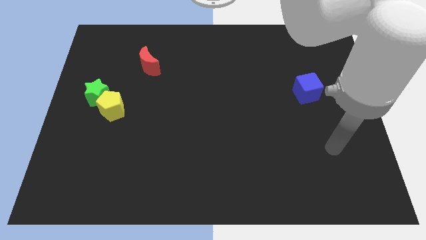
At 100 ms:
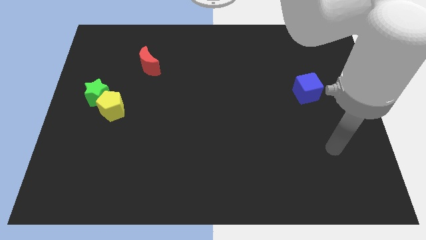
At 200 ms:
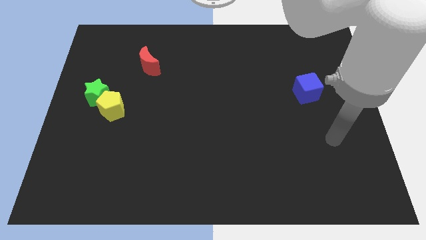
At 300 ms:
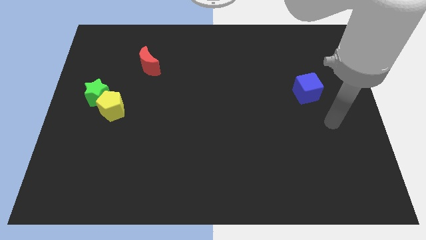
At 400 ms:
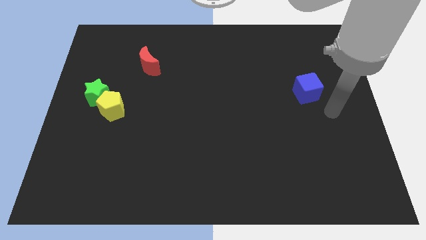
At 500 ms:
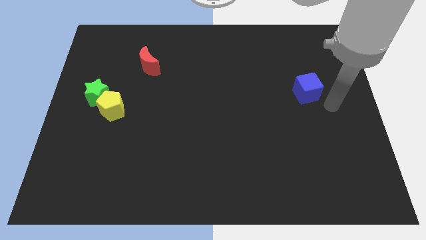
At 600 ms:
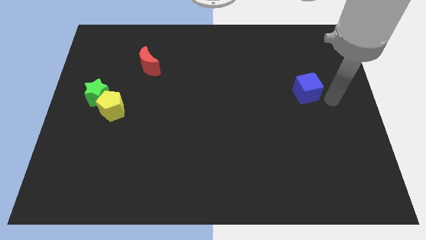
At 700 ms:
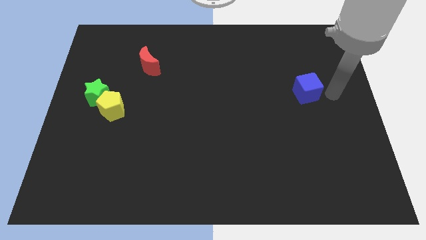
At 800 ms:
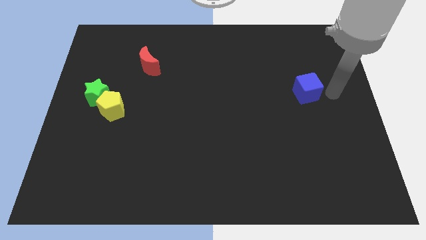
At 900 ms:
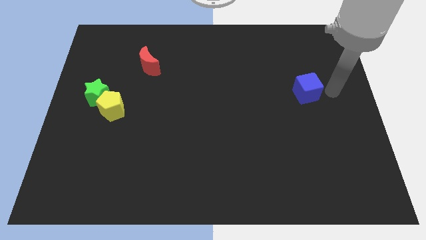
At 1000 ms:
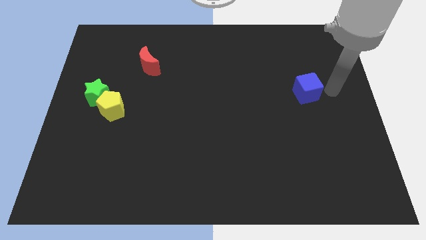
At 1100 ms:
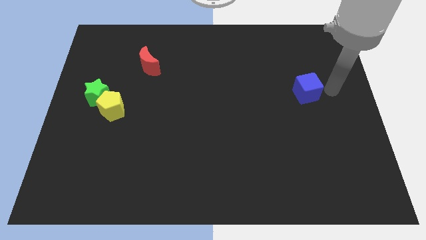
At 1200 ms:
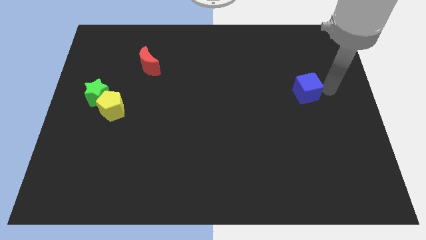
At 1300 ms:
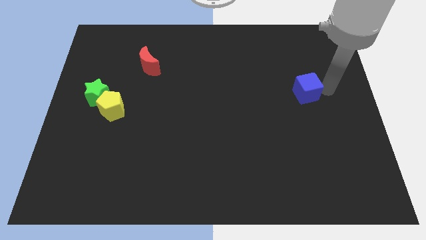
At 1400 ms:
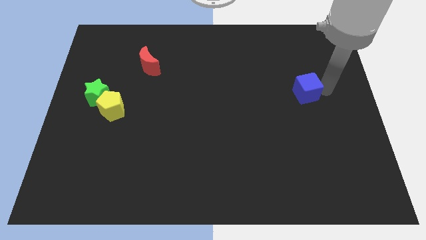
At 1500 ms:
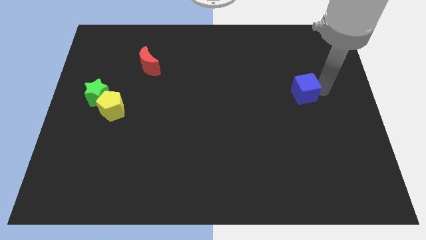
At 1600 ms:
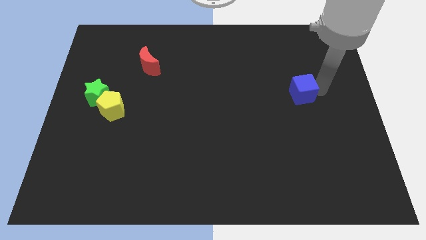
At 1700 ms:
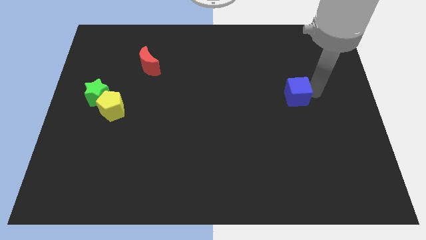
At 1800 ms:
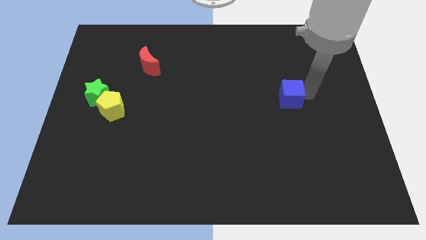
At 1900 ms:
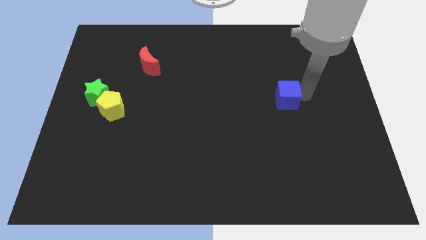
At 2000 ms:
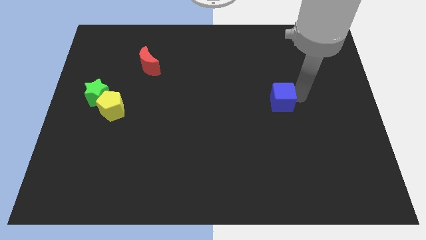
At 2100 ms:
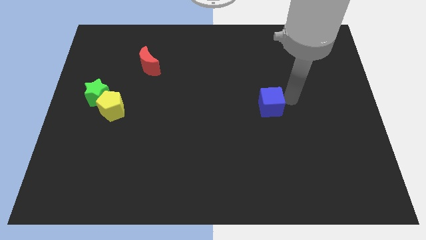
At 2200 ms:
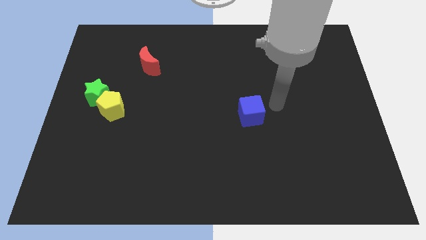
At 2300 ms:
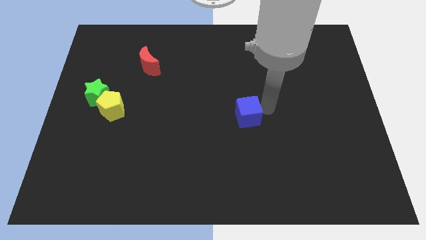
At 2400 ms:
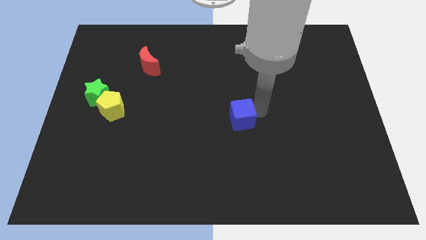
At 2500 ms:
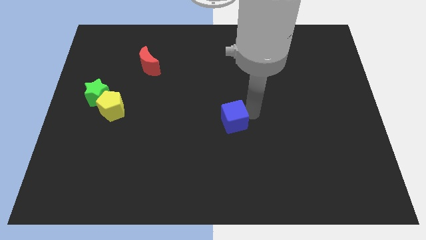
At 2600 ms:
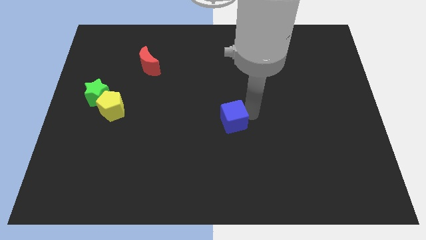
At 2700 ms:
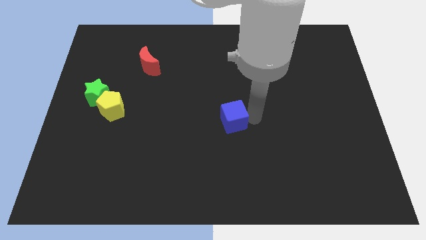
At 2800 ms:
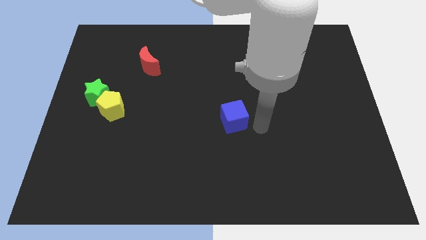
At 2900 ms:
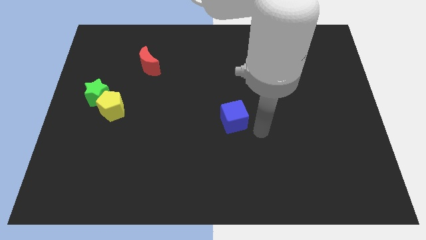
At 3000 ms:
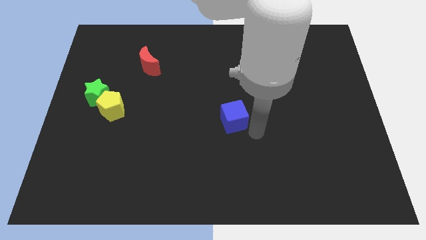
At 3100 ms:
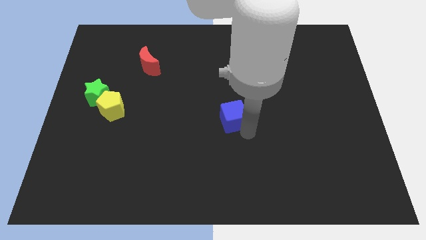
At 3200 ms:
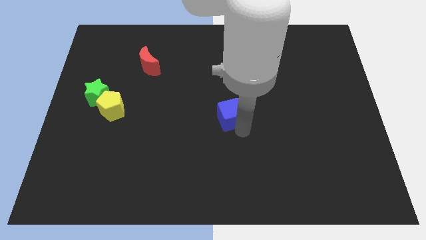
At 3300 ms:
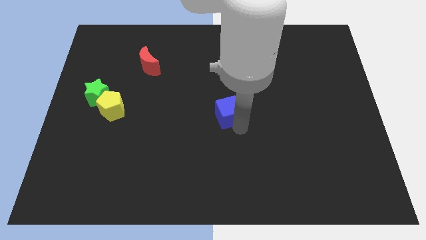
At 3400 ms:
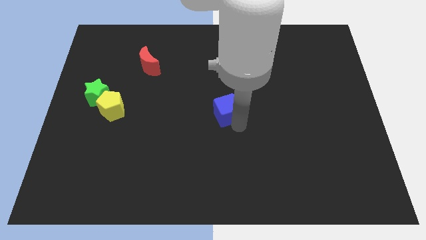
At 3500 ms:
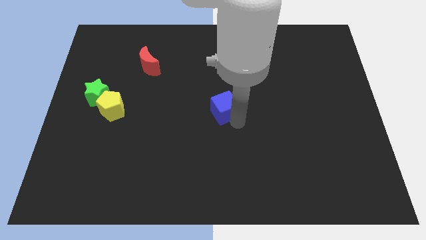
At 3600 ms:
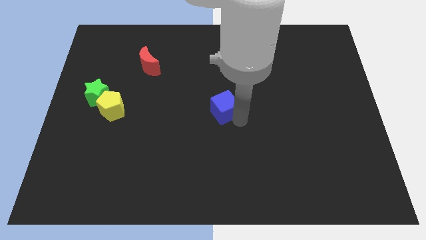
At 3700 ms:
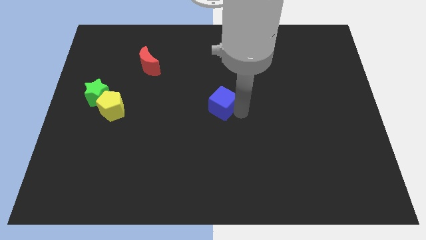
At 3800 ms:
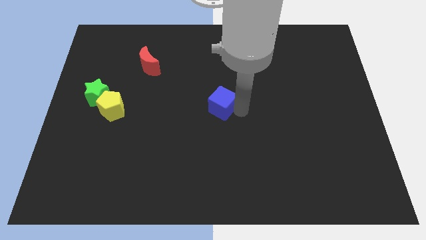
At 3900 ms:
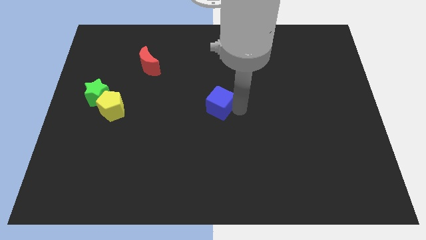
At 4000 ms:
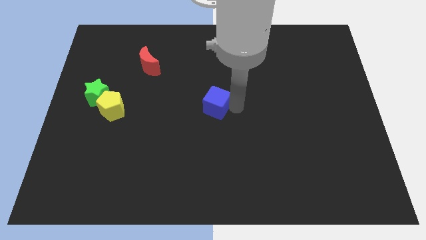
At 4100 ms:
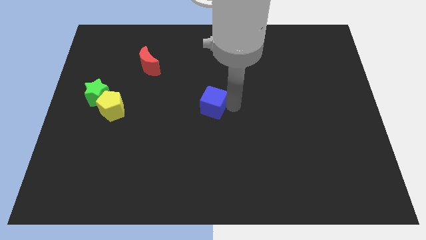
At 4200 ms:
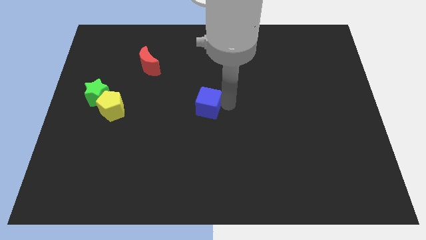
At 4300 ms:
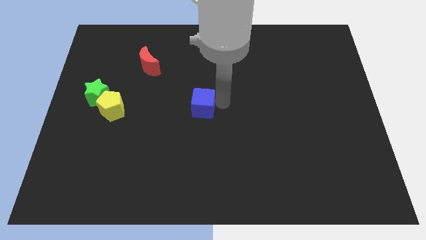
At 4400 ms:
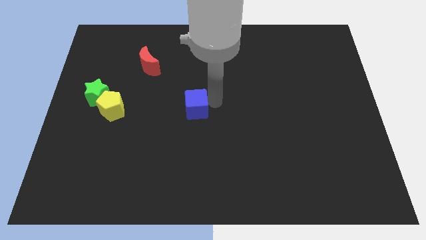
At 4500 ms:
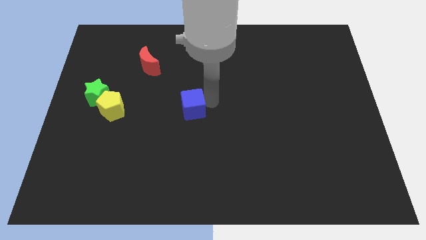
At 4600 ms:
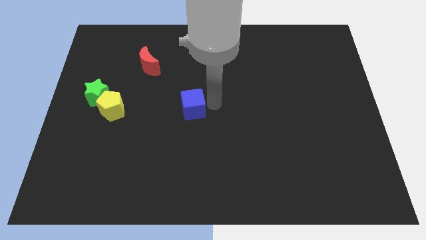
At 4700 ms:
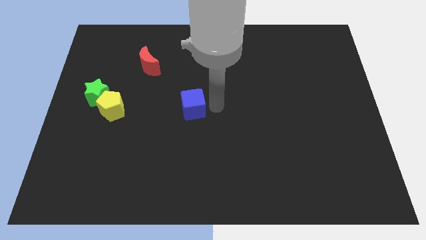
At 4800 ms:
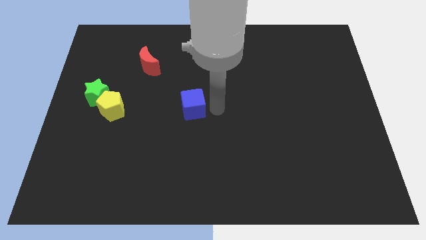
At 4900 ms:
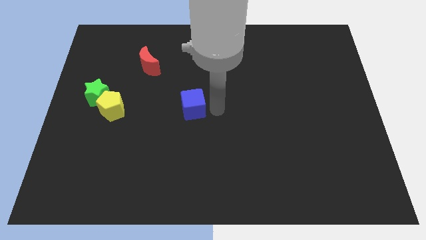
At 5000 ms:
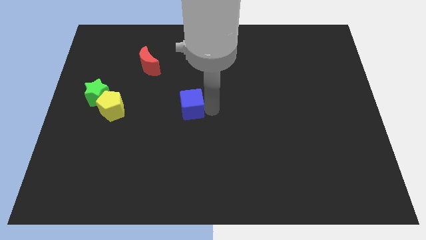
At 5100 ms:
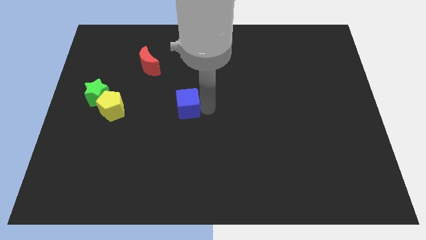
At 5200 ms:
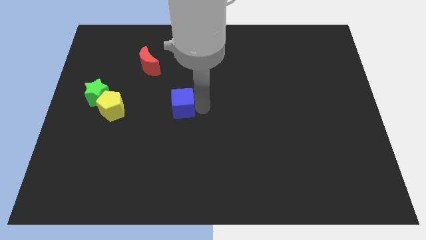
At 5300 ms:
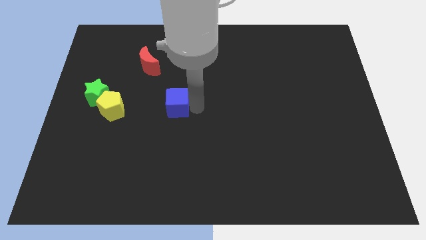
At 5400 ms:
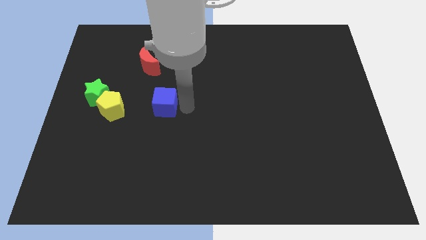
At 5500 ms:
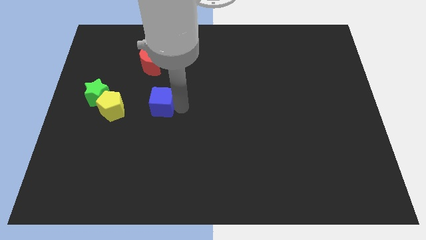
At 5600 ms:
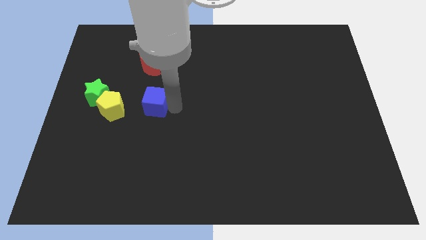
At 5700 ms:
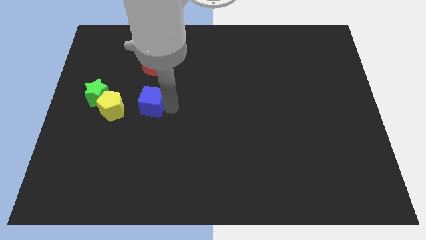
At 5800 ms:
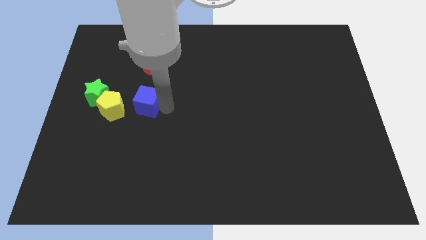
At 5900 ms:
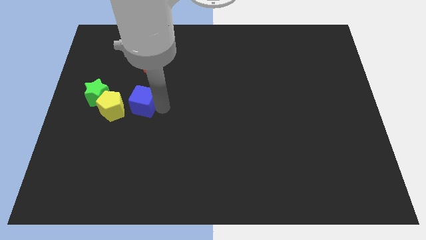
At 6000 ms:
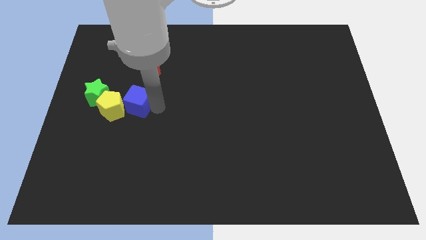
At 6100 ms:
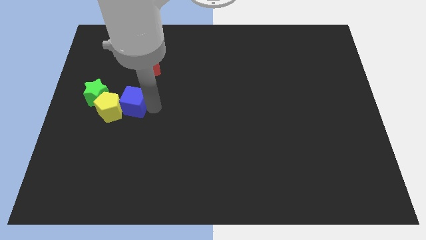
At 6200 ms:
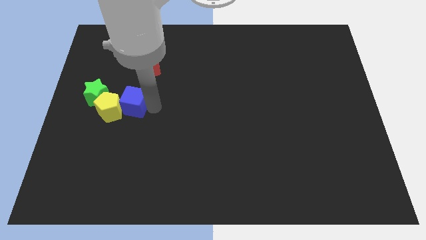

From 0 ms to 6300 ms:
slide the blue cube towards the yellow block

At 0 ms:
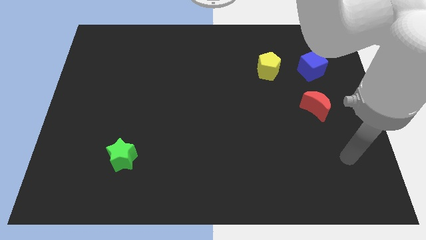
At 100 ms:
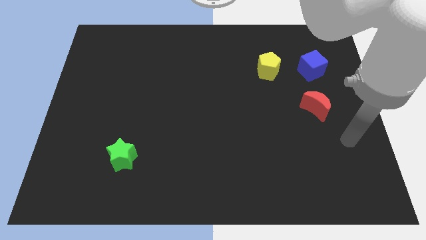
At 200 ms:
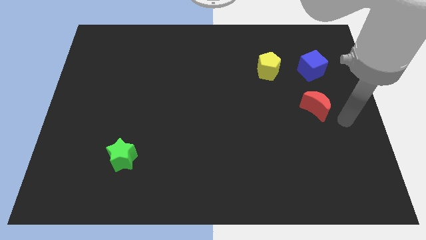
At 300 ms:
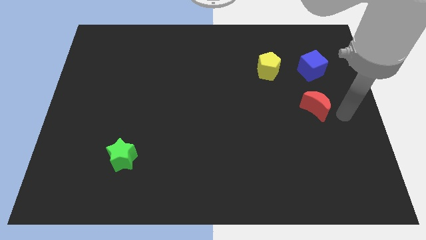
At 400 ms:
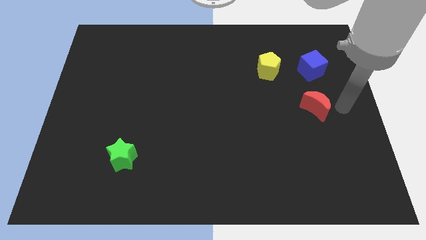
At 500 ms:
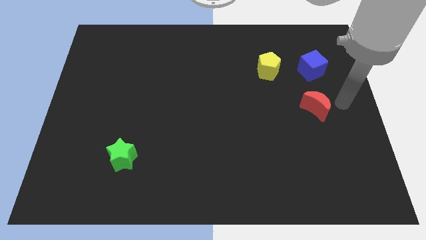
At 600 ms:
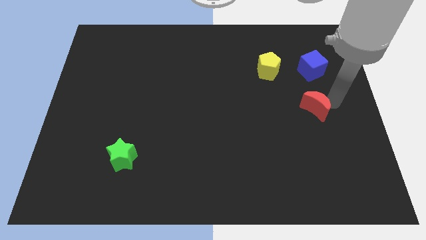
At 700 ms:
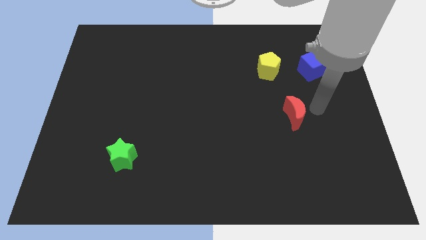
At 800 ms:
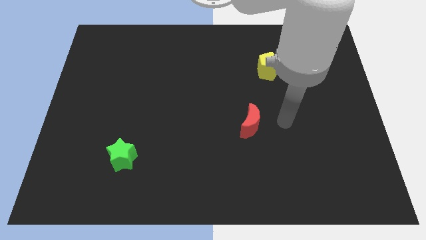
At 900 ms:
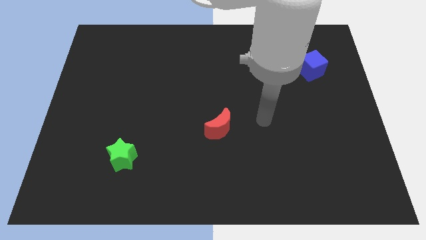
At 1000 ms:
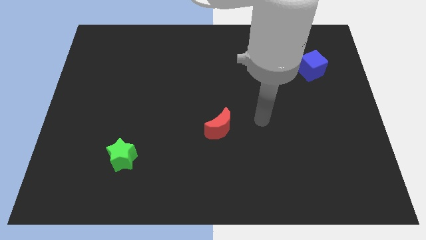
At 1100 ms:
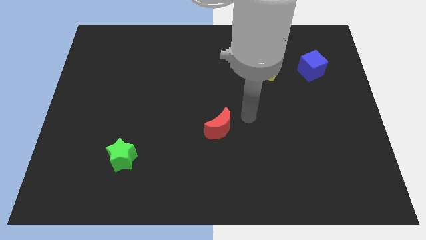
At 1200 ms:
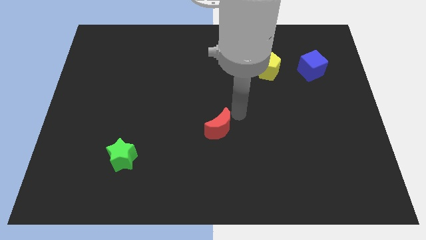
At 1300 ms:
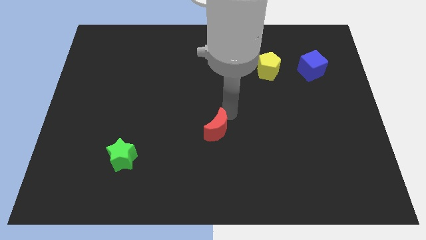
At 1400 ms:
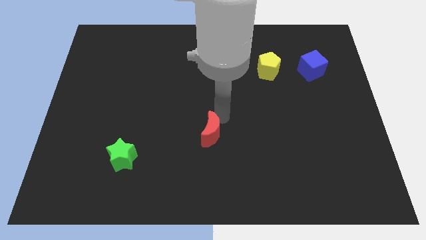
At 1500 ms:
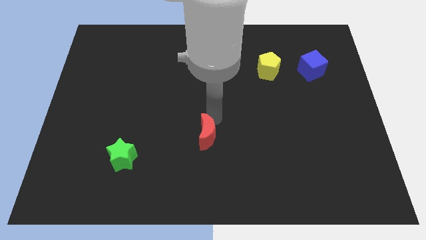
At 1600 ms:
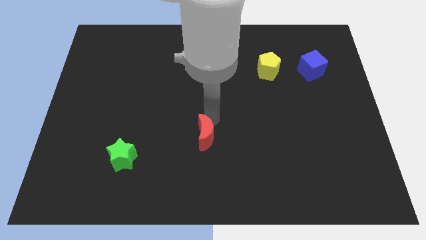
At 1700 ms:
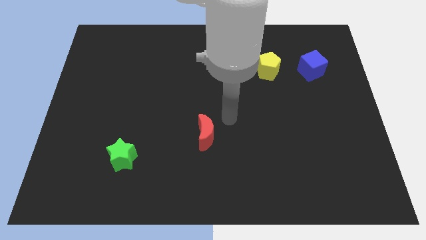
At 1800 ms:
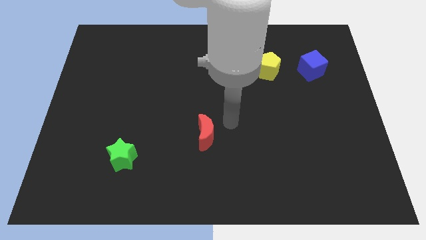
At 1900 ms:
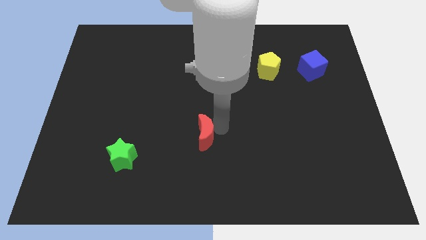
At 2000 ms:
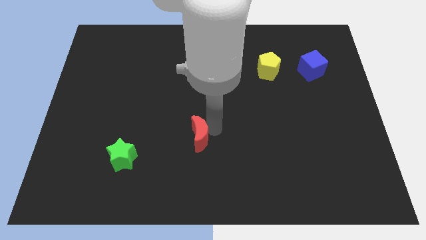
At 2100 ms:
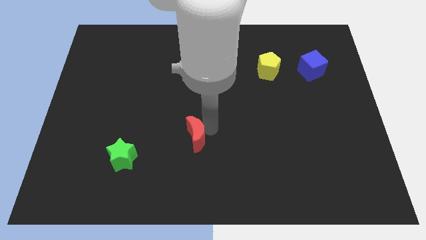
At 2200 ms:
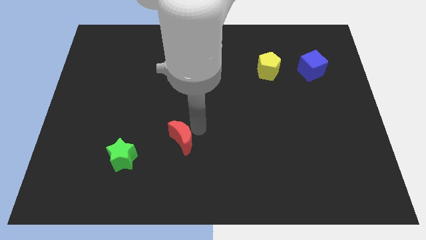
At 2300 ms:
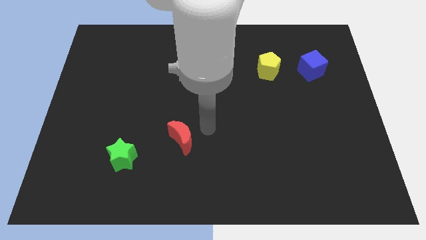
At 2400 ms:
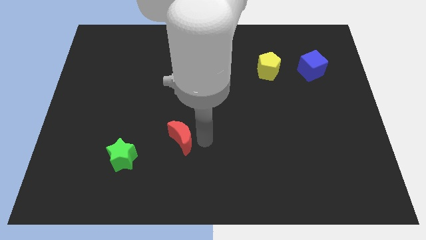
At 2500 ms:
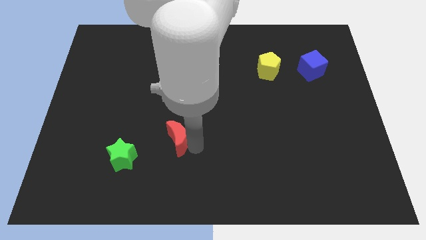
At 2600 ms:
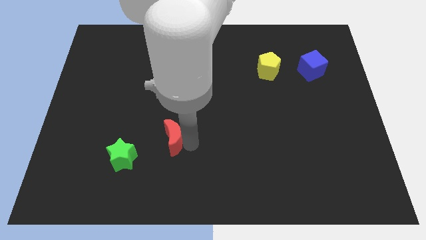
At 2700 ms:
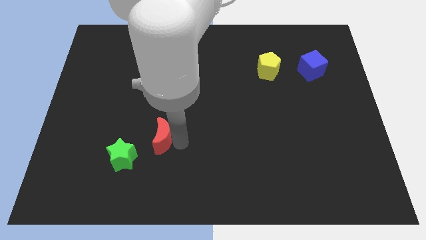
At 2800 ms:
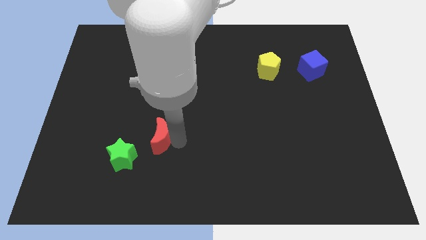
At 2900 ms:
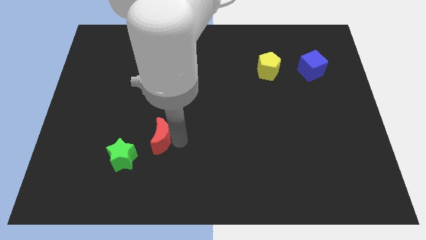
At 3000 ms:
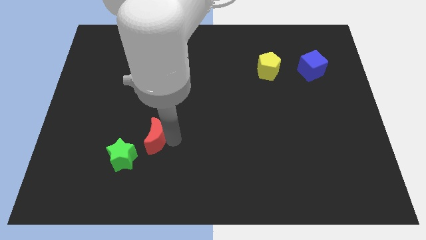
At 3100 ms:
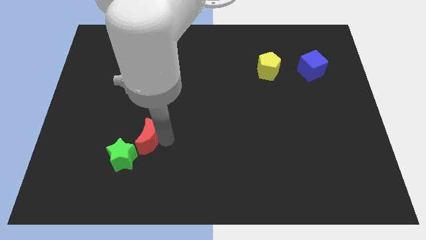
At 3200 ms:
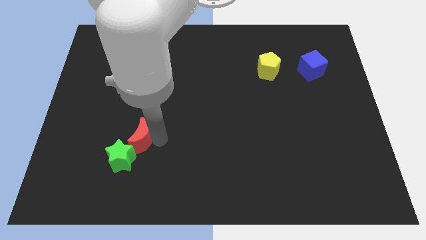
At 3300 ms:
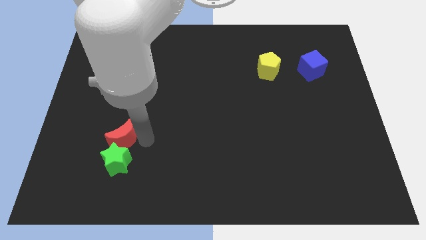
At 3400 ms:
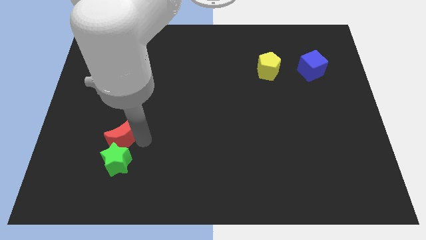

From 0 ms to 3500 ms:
move the moon to the green star
